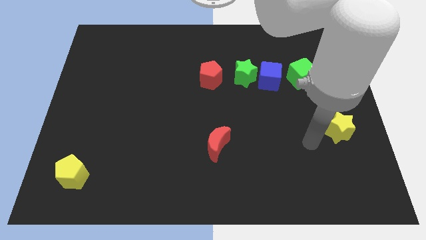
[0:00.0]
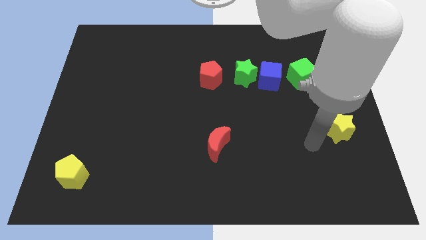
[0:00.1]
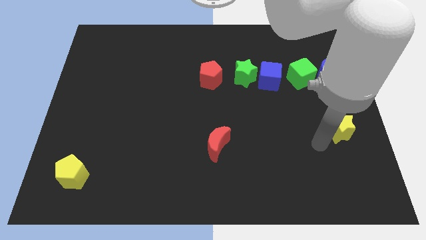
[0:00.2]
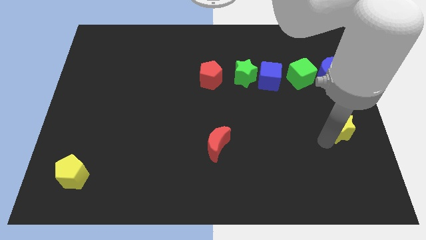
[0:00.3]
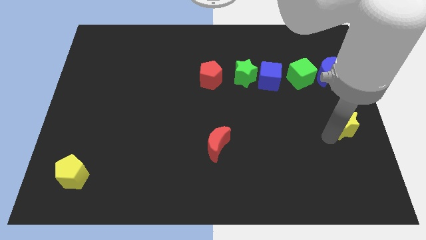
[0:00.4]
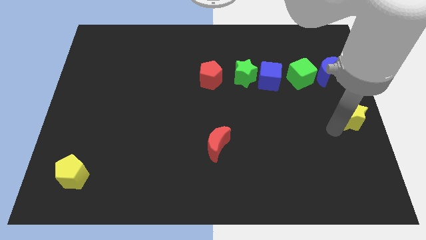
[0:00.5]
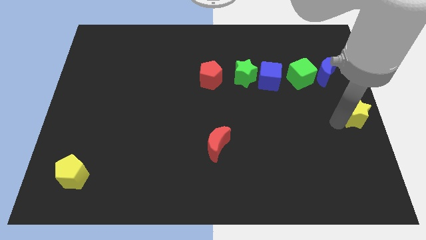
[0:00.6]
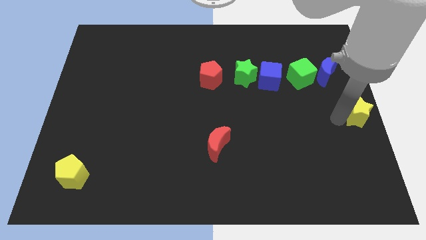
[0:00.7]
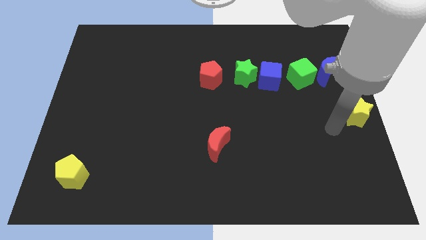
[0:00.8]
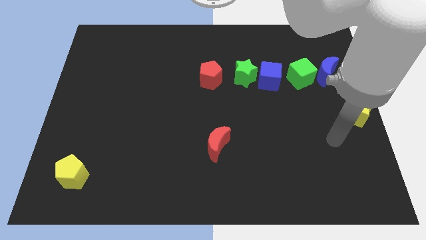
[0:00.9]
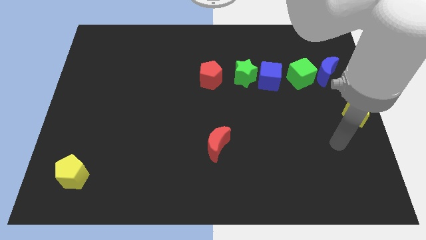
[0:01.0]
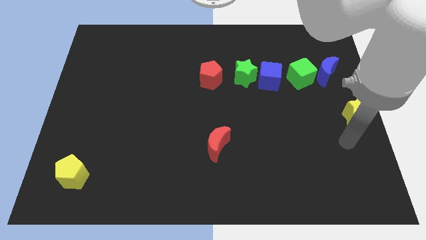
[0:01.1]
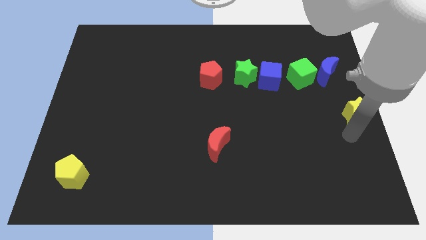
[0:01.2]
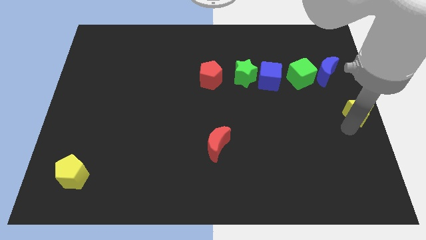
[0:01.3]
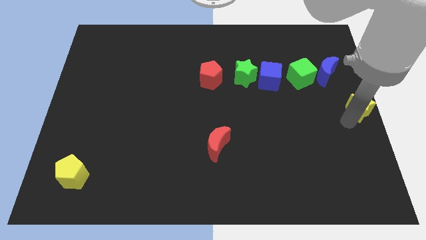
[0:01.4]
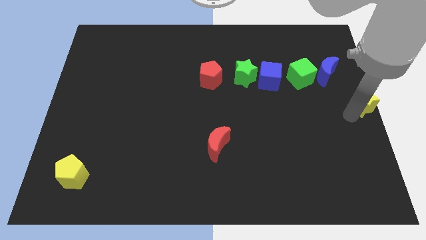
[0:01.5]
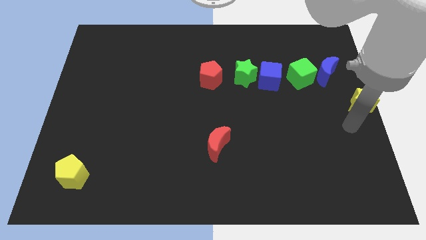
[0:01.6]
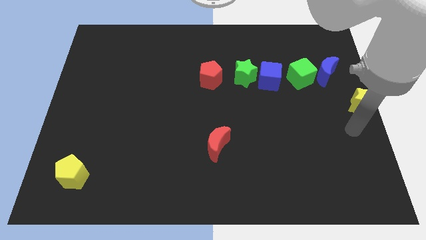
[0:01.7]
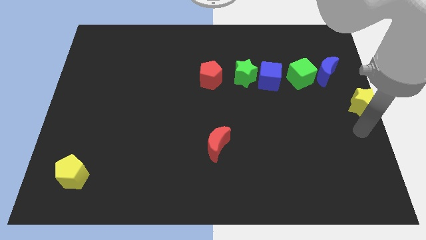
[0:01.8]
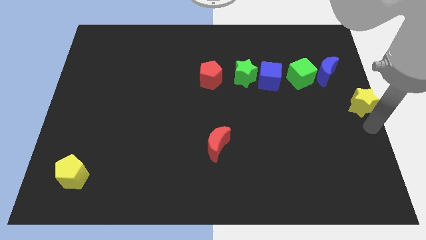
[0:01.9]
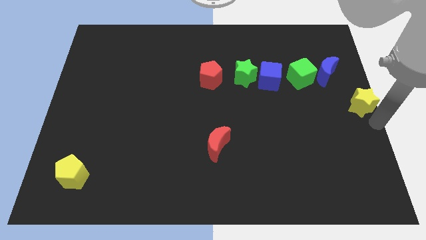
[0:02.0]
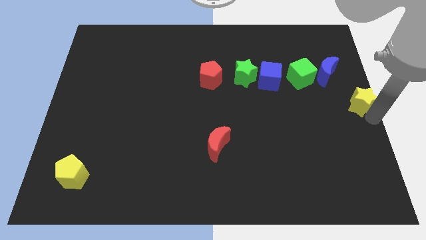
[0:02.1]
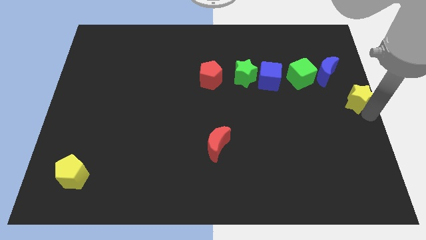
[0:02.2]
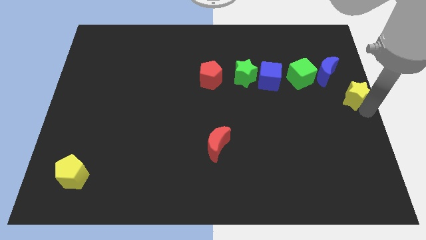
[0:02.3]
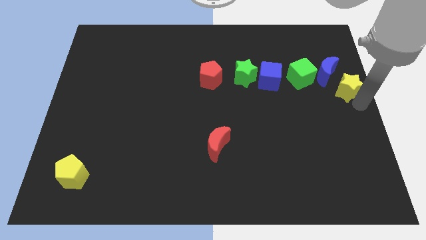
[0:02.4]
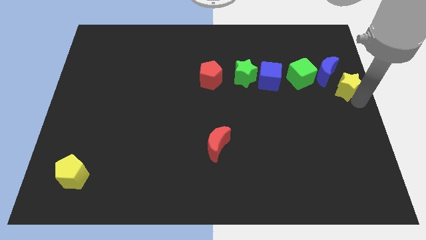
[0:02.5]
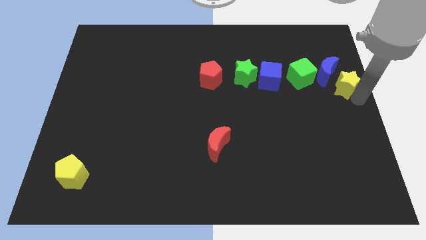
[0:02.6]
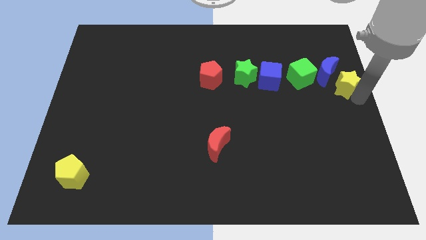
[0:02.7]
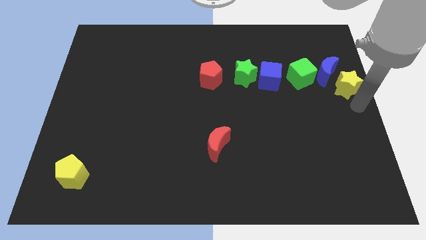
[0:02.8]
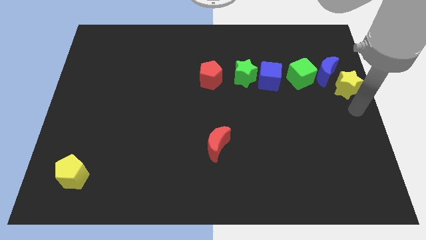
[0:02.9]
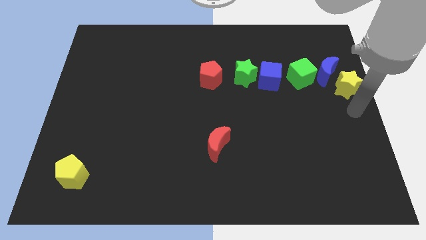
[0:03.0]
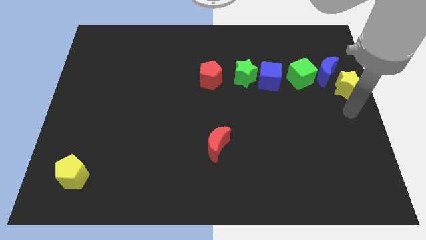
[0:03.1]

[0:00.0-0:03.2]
push the yellow star to the right of the blue crescent

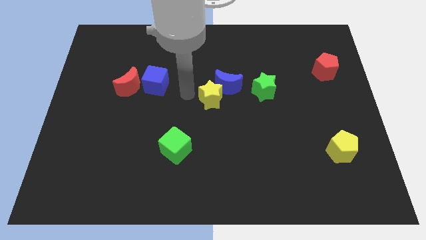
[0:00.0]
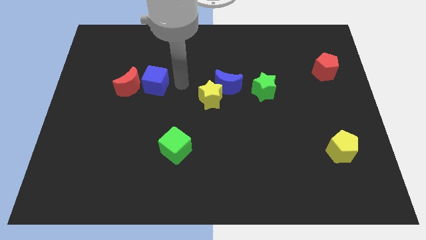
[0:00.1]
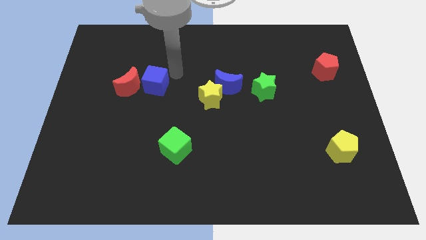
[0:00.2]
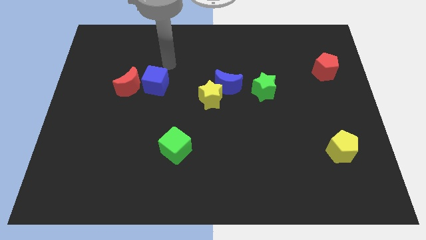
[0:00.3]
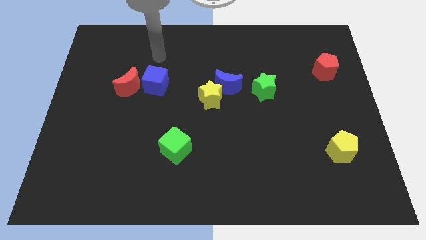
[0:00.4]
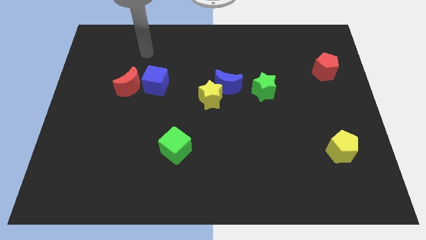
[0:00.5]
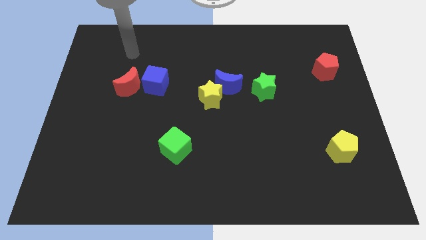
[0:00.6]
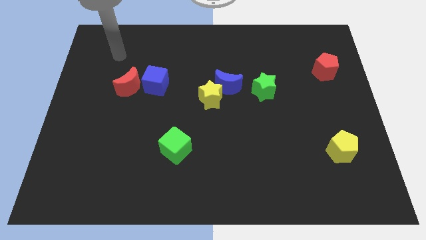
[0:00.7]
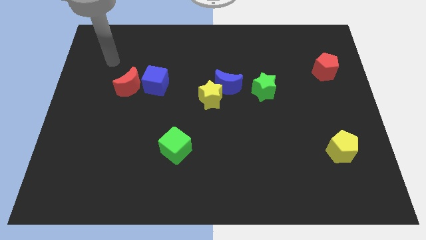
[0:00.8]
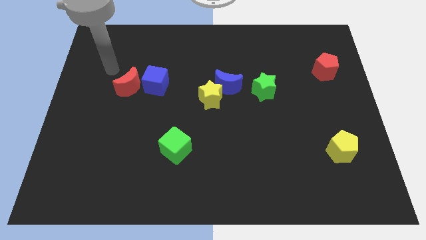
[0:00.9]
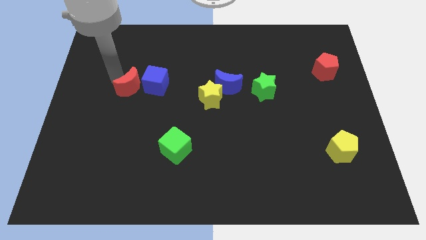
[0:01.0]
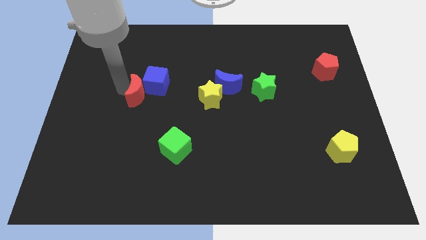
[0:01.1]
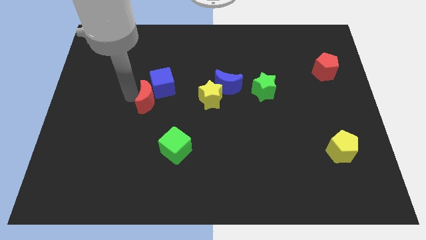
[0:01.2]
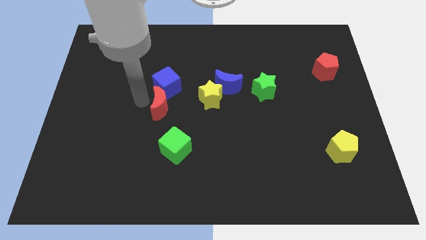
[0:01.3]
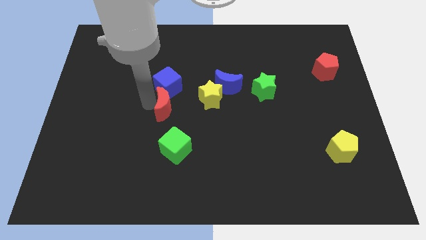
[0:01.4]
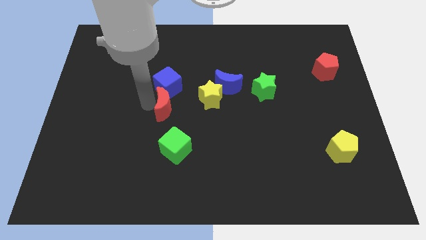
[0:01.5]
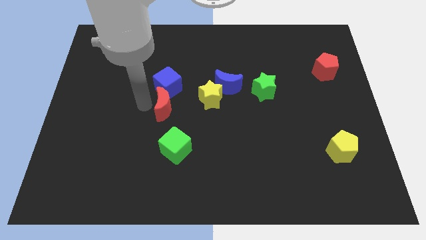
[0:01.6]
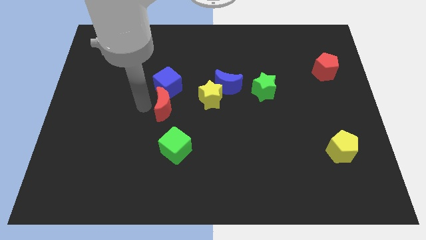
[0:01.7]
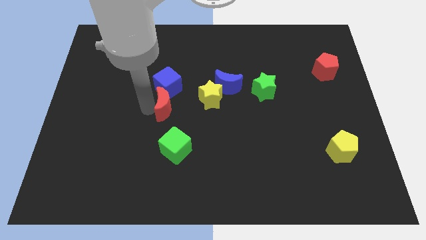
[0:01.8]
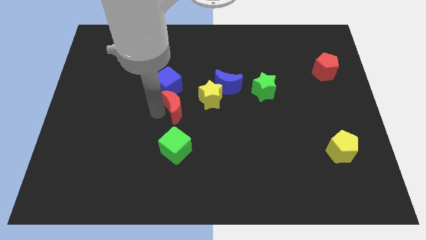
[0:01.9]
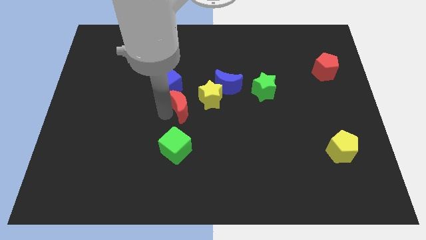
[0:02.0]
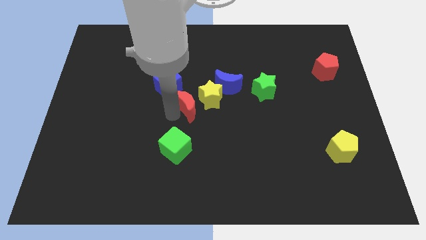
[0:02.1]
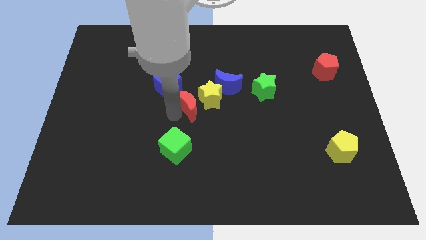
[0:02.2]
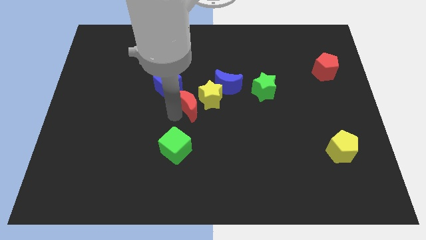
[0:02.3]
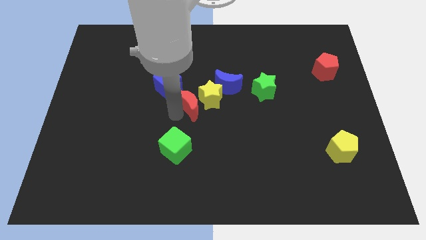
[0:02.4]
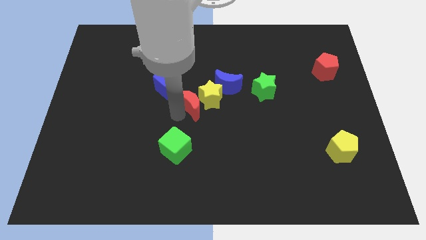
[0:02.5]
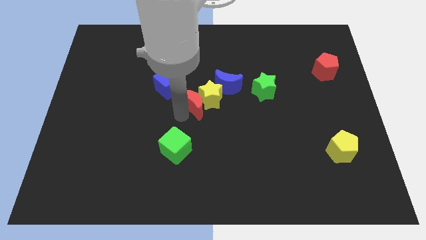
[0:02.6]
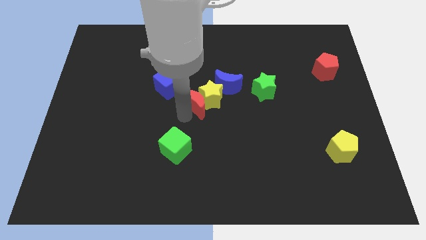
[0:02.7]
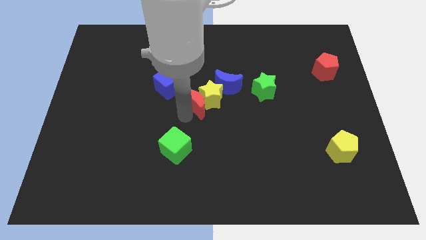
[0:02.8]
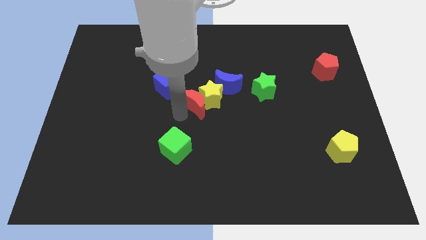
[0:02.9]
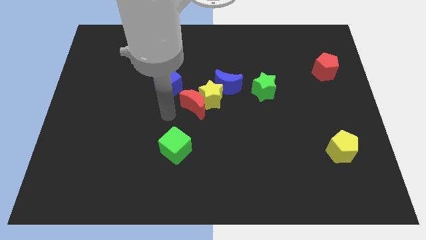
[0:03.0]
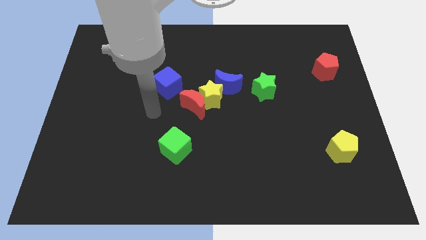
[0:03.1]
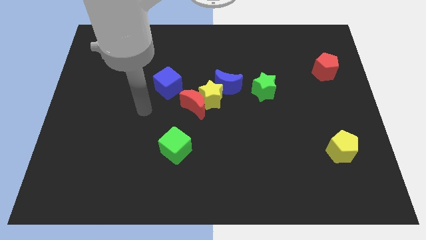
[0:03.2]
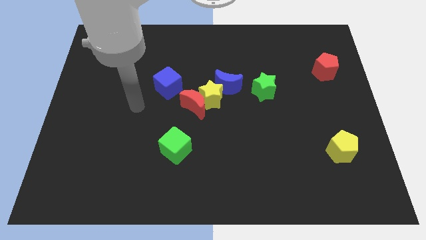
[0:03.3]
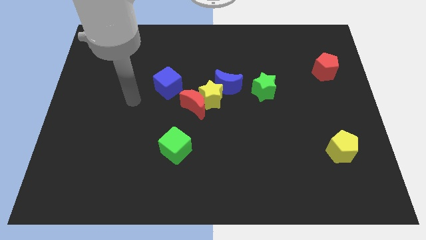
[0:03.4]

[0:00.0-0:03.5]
move the red moon diagonally to the bottom left of the yellow star and blue moon

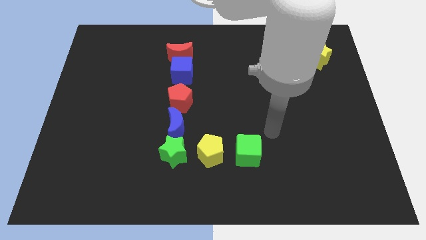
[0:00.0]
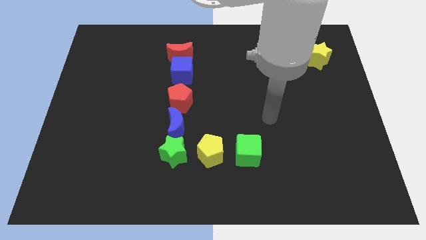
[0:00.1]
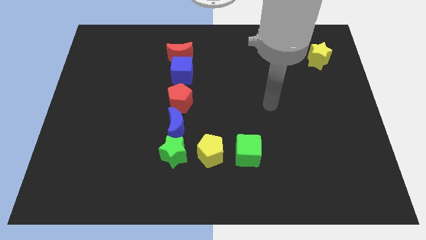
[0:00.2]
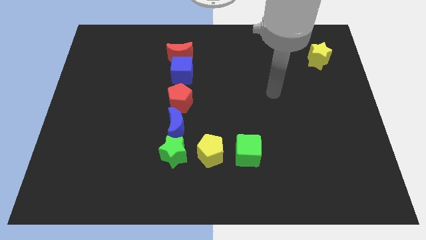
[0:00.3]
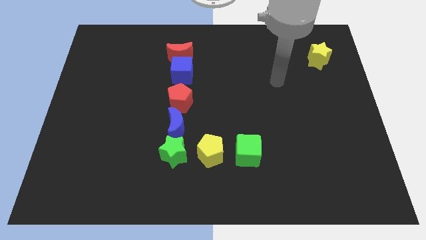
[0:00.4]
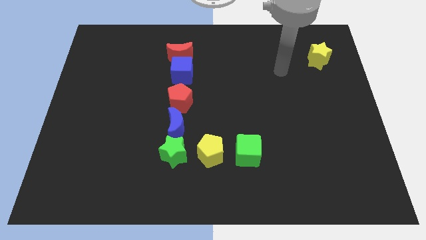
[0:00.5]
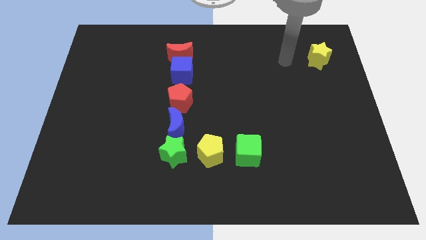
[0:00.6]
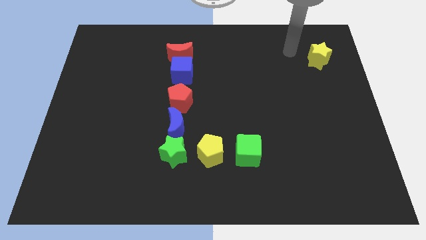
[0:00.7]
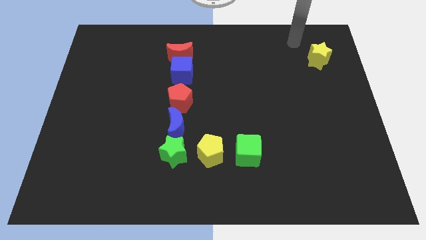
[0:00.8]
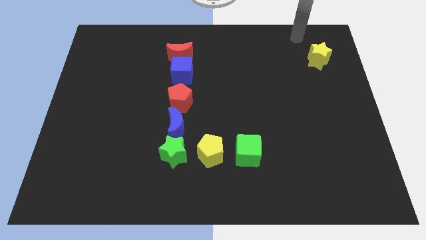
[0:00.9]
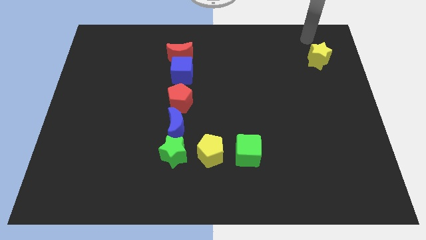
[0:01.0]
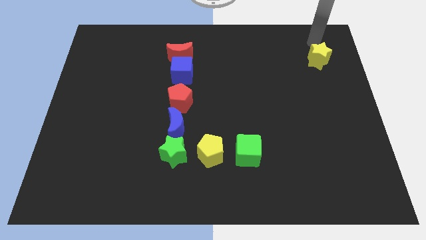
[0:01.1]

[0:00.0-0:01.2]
move your arm at the top left side of the yellow star

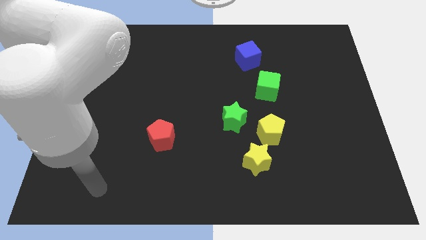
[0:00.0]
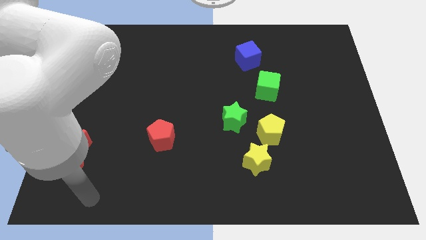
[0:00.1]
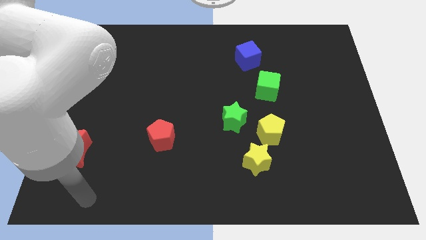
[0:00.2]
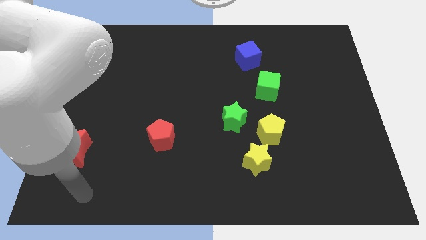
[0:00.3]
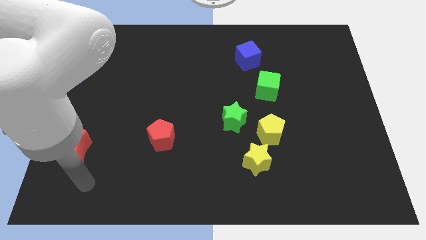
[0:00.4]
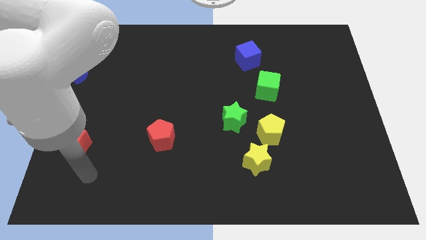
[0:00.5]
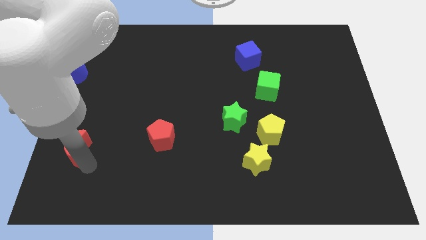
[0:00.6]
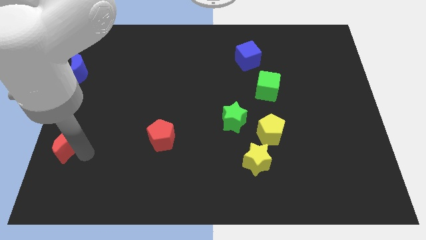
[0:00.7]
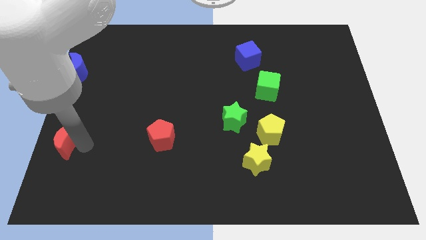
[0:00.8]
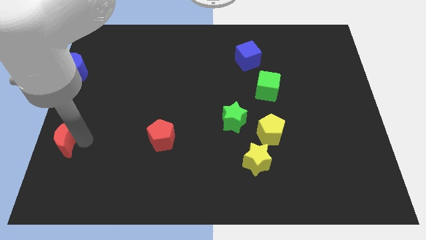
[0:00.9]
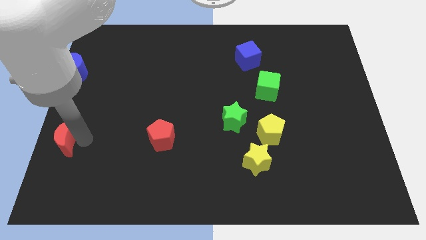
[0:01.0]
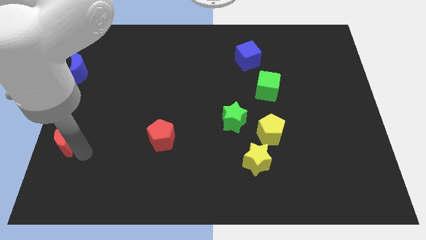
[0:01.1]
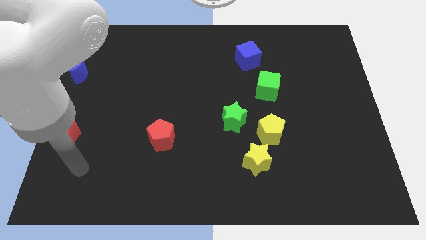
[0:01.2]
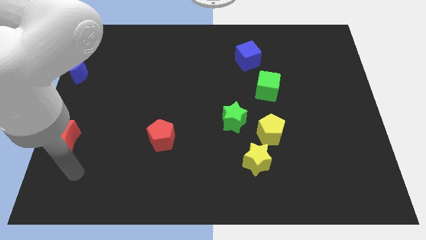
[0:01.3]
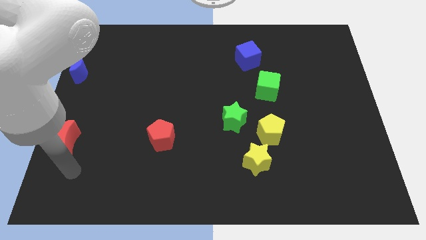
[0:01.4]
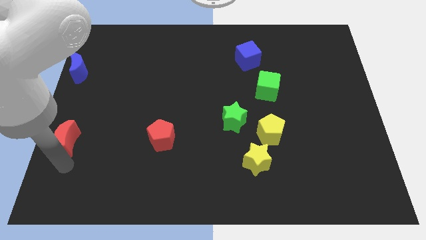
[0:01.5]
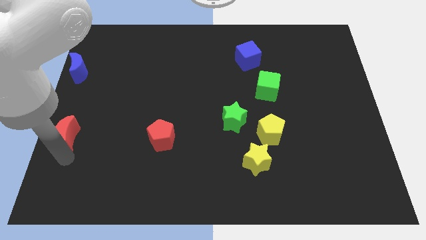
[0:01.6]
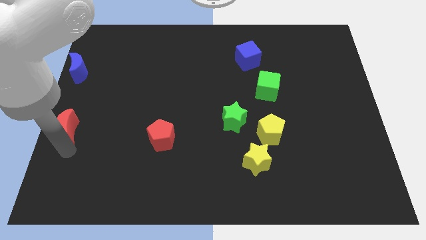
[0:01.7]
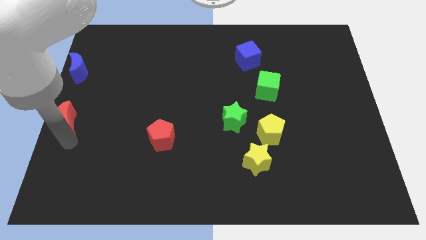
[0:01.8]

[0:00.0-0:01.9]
move the red crescent towards the blue moon
